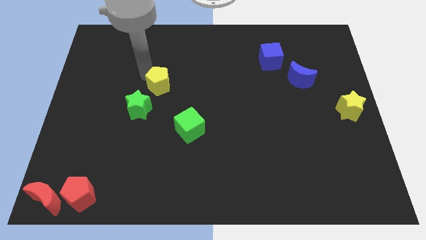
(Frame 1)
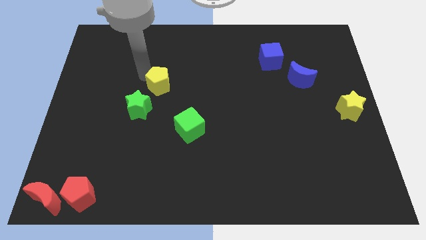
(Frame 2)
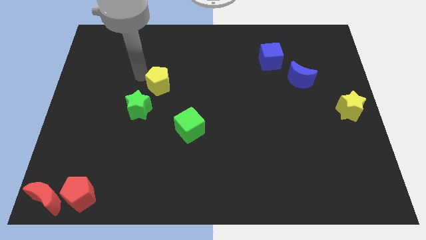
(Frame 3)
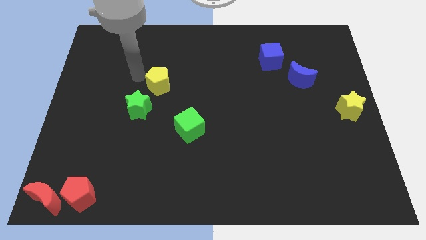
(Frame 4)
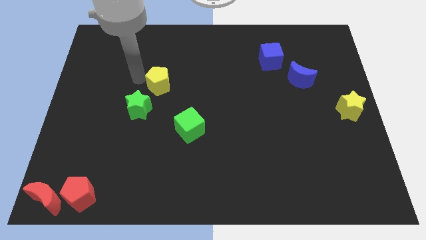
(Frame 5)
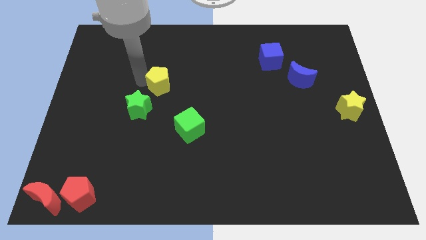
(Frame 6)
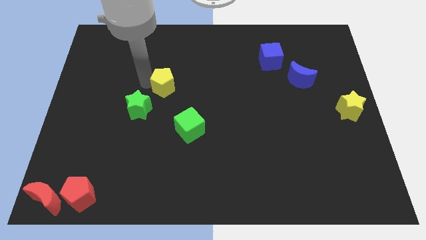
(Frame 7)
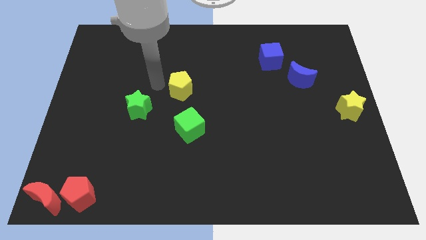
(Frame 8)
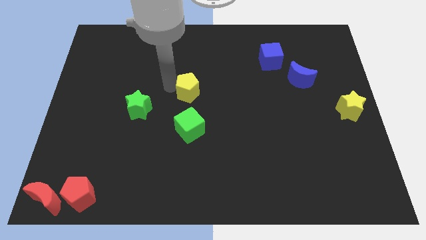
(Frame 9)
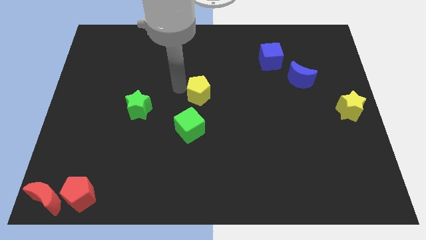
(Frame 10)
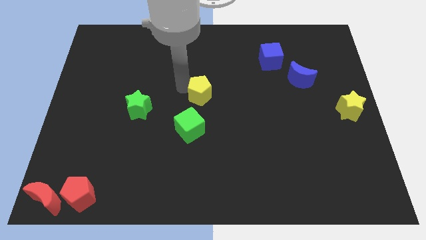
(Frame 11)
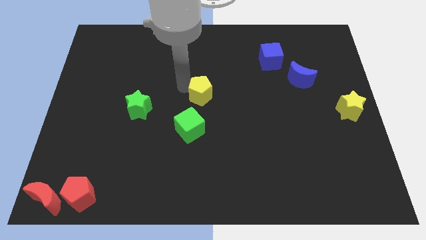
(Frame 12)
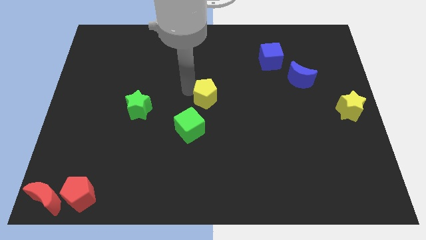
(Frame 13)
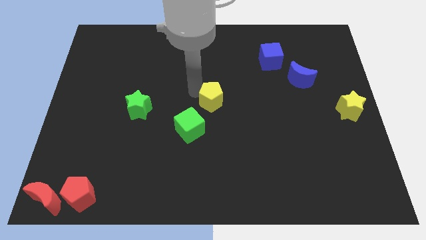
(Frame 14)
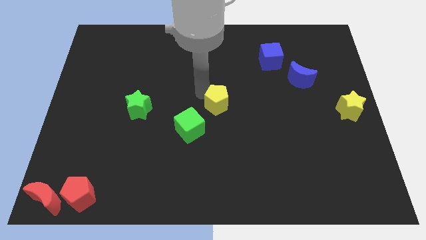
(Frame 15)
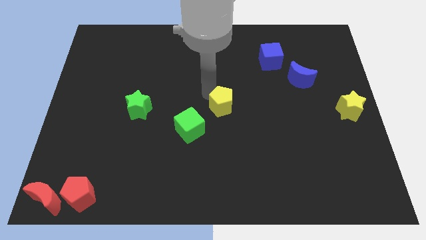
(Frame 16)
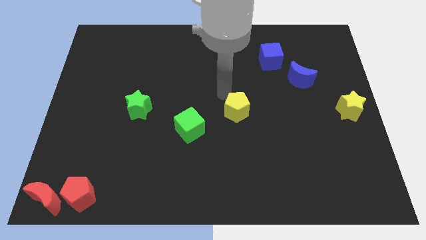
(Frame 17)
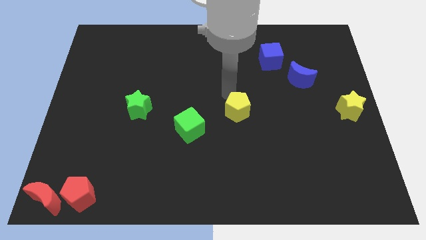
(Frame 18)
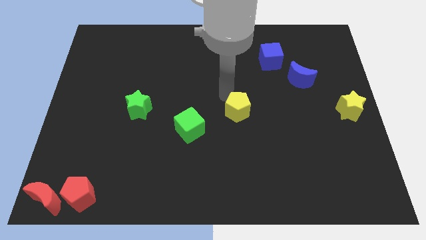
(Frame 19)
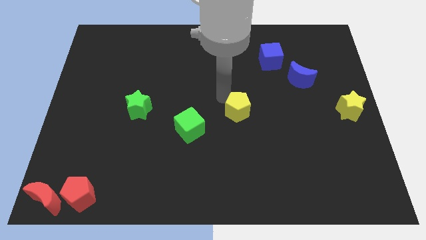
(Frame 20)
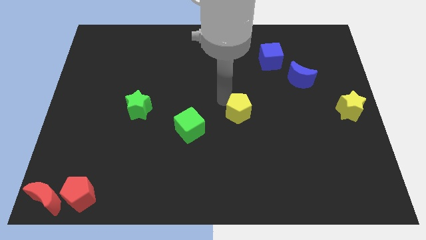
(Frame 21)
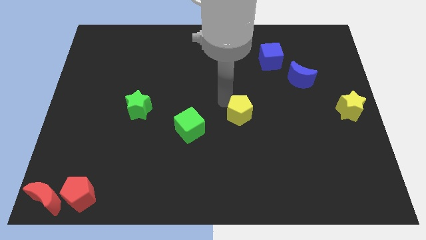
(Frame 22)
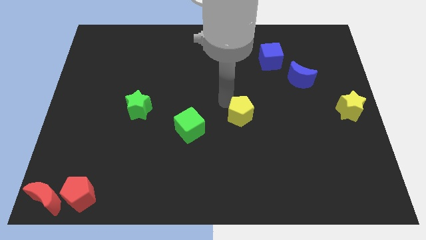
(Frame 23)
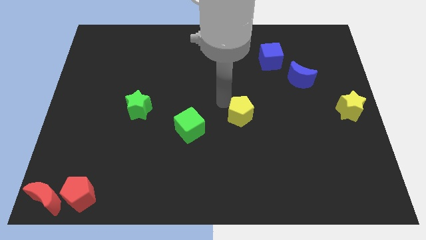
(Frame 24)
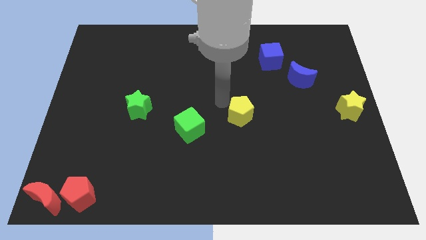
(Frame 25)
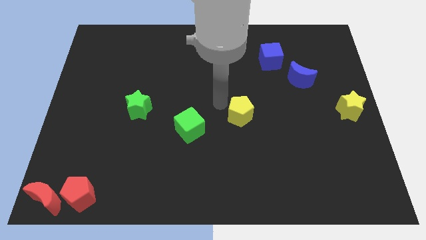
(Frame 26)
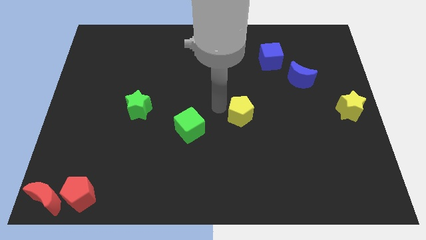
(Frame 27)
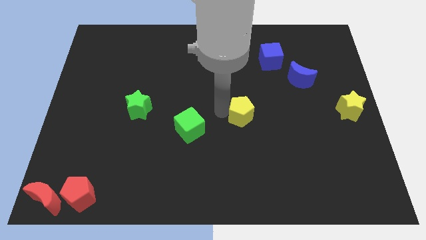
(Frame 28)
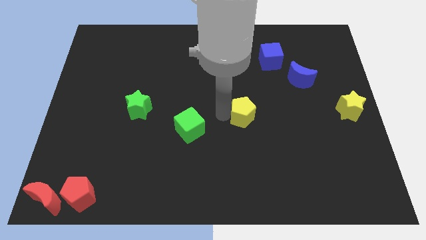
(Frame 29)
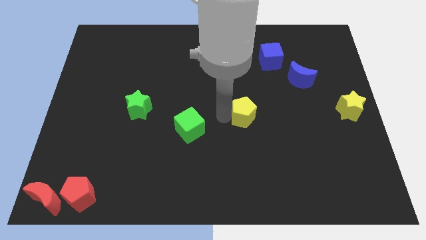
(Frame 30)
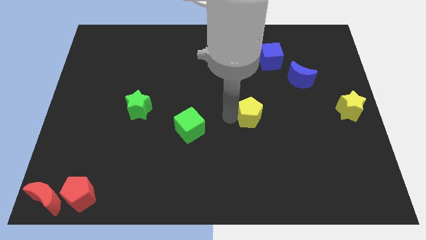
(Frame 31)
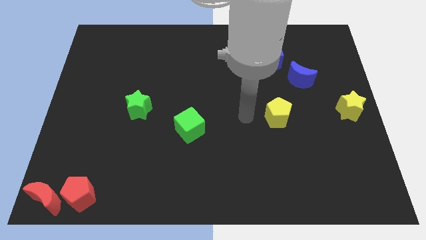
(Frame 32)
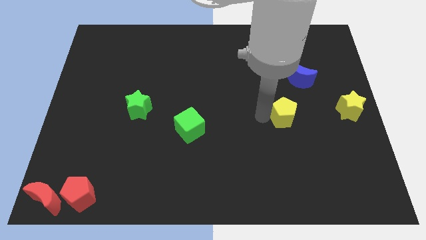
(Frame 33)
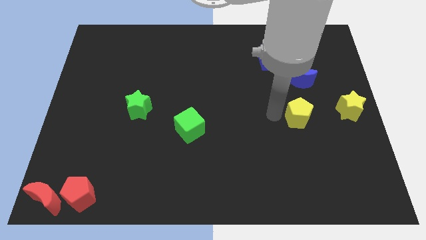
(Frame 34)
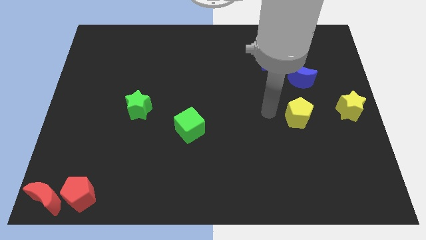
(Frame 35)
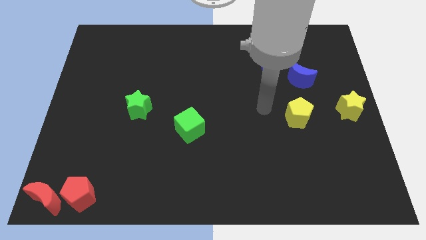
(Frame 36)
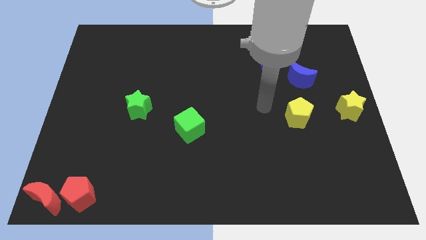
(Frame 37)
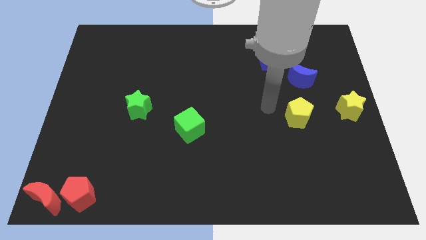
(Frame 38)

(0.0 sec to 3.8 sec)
place the yellow pentagon below the blue moon

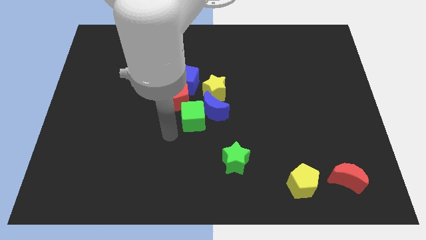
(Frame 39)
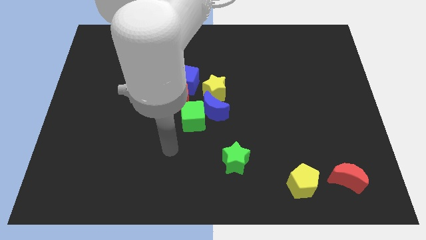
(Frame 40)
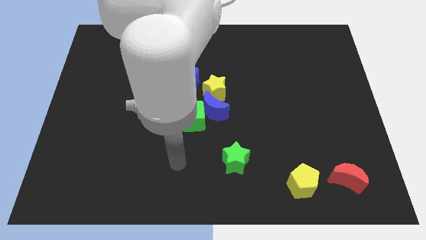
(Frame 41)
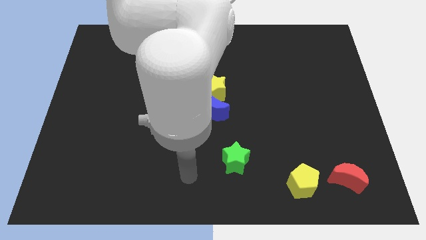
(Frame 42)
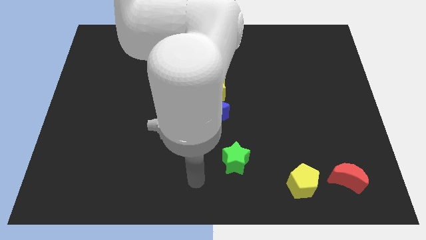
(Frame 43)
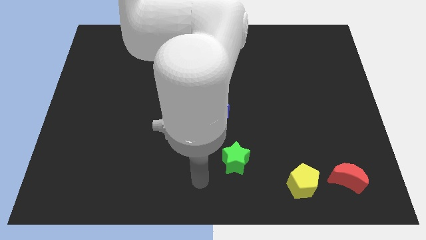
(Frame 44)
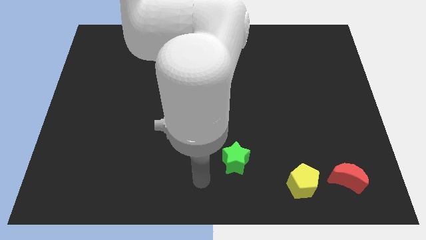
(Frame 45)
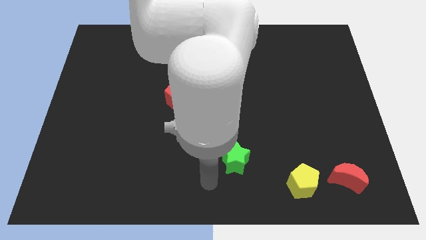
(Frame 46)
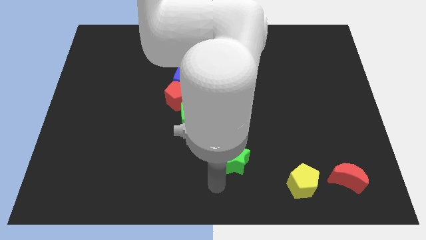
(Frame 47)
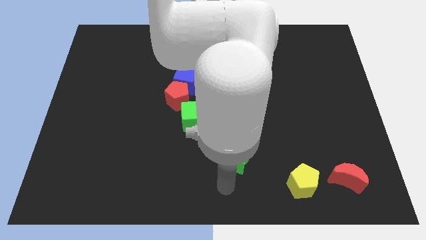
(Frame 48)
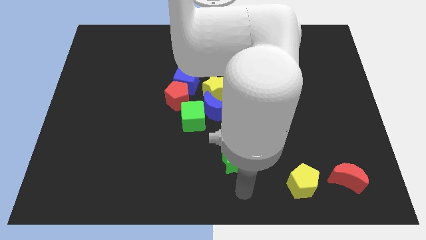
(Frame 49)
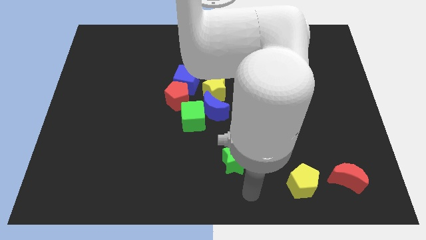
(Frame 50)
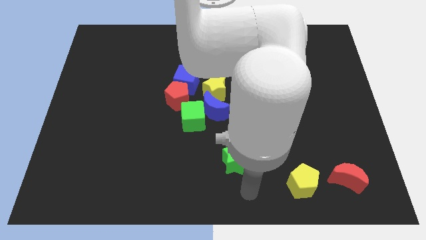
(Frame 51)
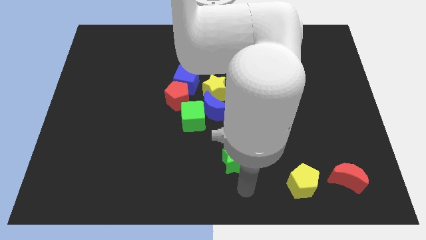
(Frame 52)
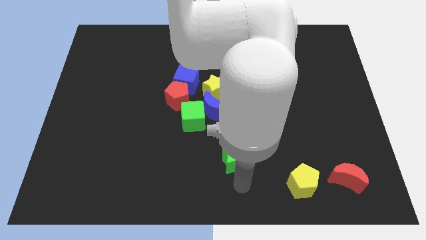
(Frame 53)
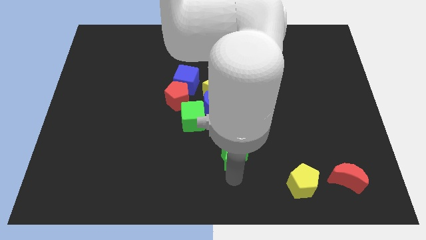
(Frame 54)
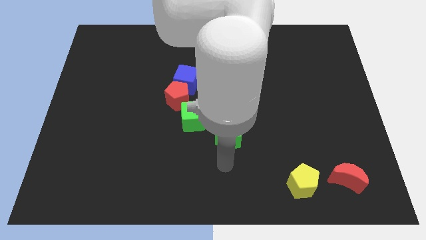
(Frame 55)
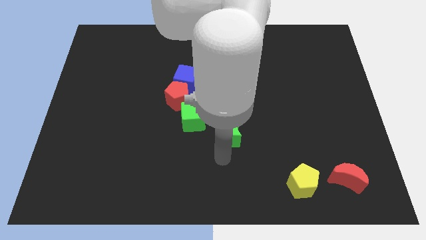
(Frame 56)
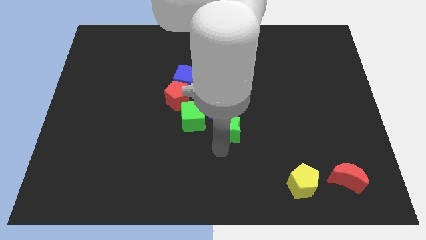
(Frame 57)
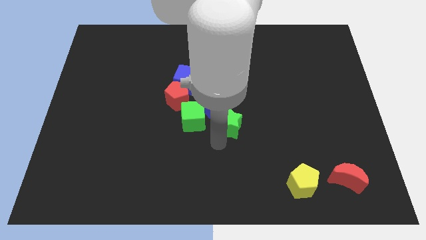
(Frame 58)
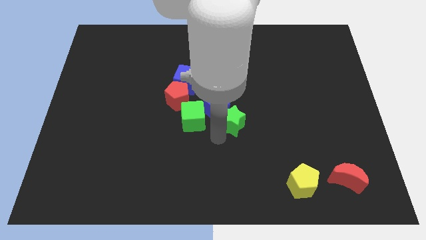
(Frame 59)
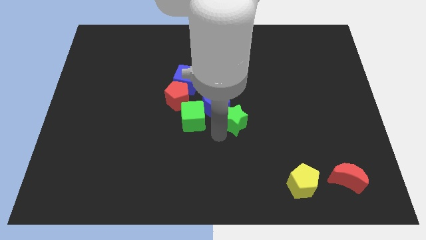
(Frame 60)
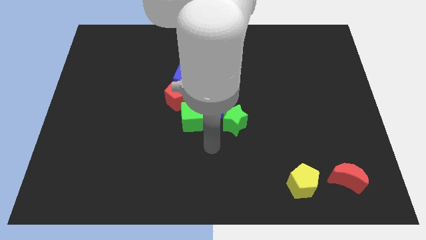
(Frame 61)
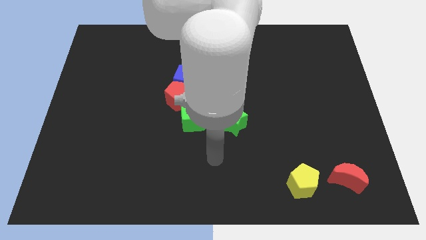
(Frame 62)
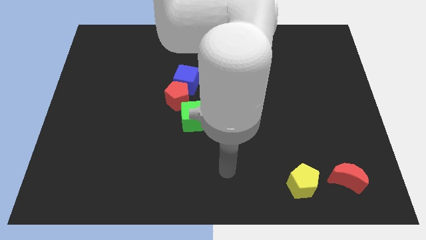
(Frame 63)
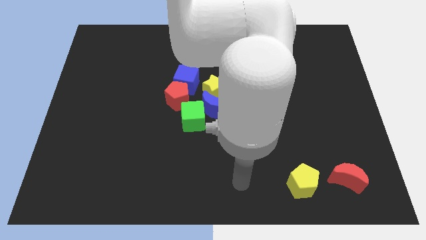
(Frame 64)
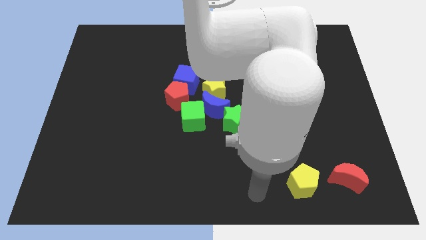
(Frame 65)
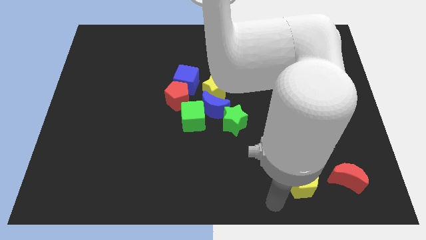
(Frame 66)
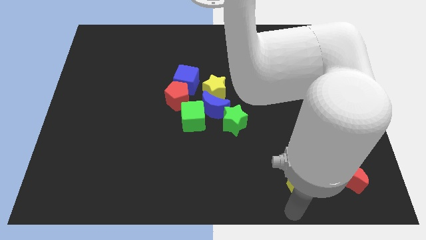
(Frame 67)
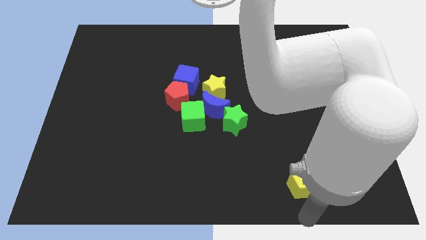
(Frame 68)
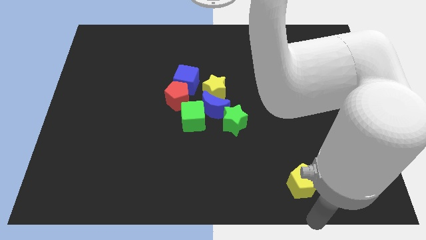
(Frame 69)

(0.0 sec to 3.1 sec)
place the green star parallel to green cube

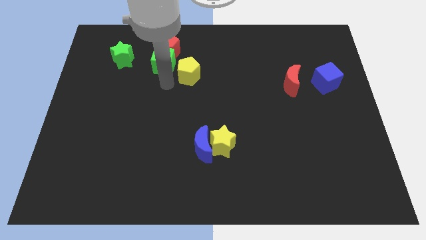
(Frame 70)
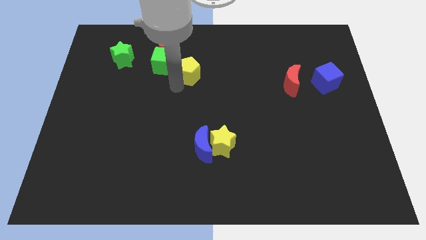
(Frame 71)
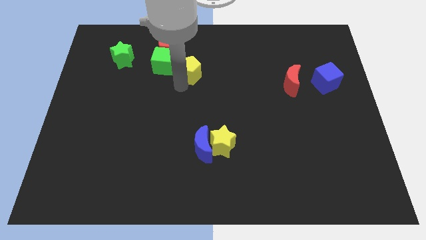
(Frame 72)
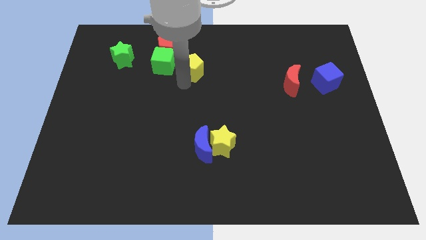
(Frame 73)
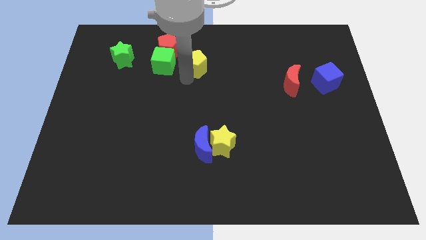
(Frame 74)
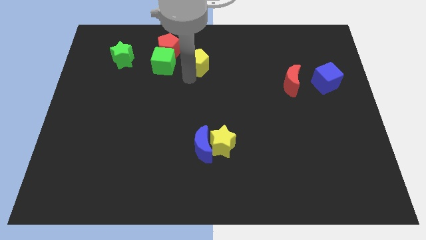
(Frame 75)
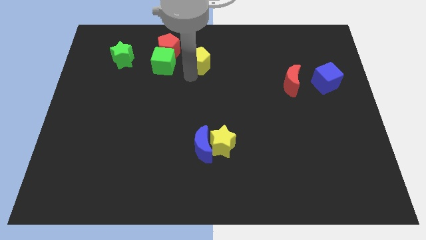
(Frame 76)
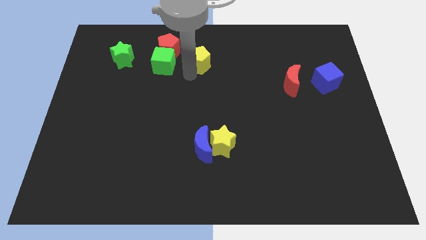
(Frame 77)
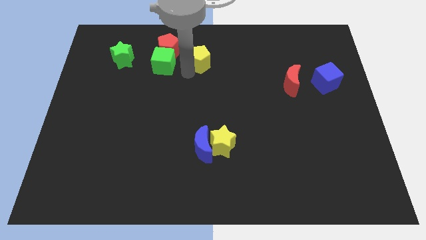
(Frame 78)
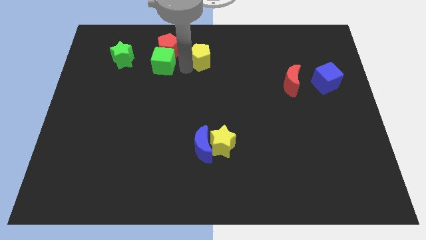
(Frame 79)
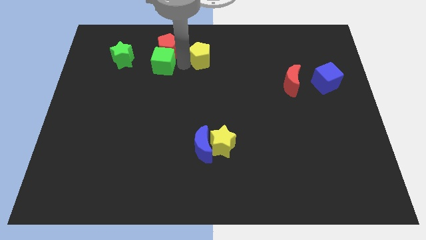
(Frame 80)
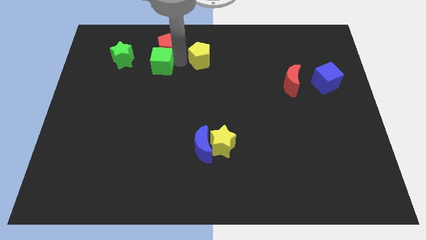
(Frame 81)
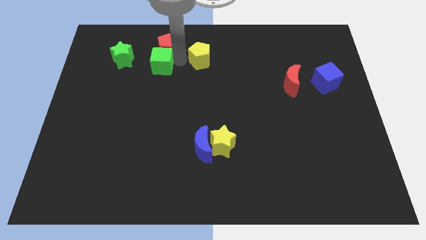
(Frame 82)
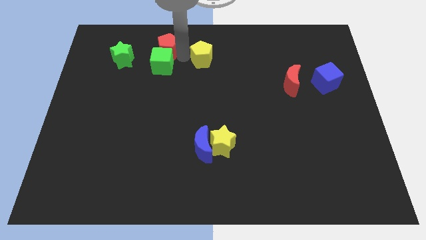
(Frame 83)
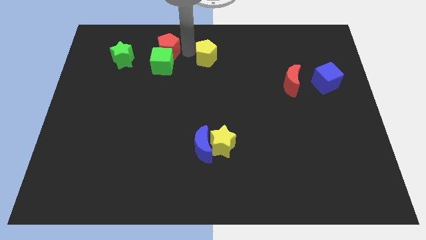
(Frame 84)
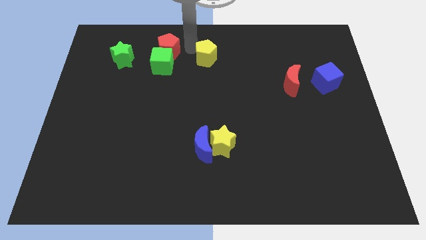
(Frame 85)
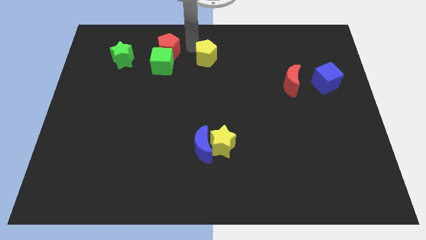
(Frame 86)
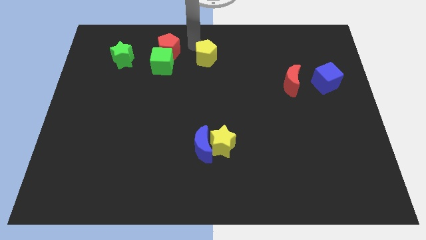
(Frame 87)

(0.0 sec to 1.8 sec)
slide the yellow pentagon parallel right to the red pentagon

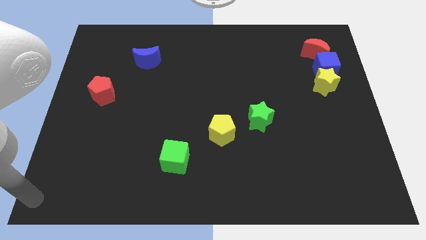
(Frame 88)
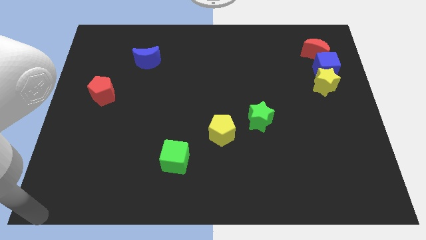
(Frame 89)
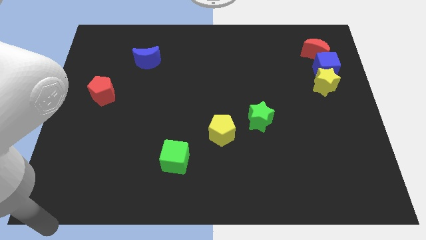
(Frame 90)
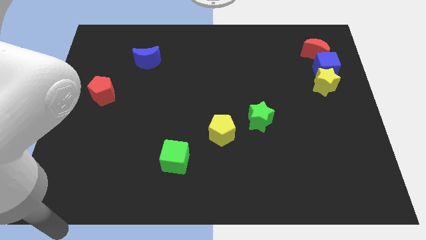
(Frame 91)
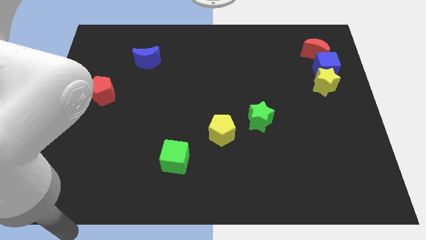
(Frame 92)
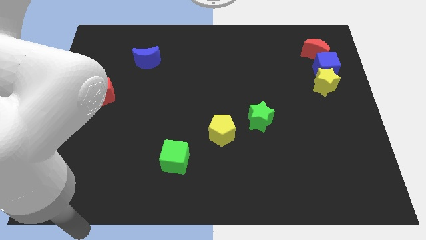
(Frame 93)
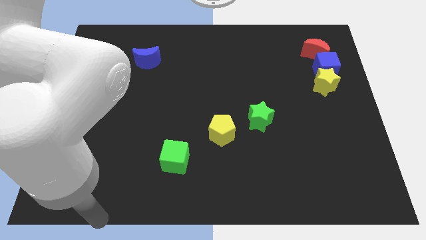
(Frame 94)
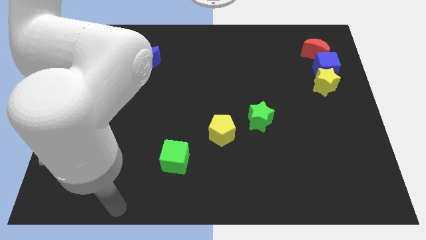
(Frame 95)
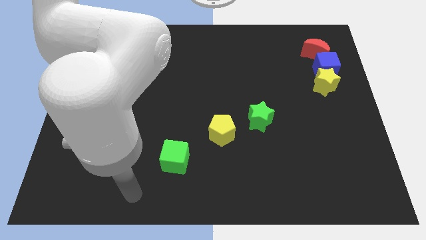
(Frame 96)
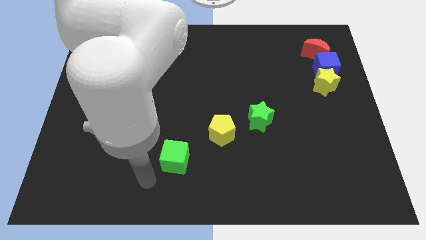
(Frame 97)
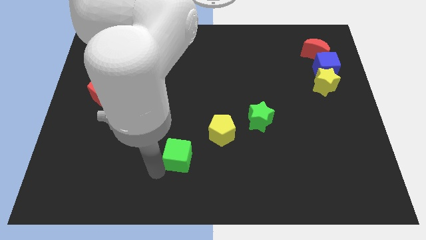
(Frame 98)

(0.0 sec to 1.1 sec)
tap your arm to the bottom left of green cube
